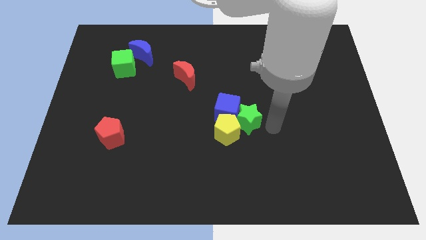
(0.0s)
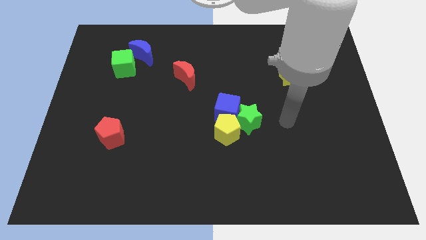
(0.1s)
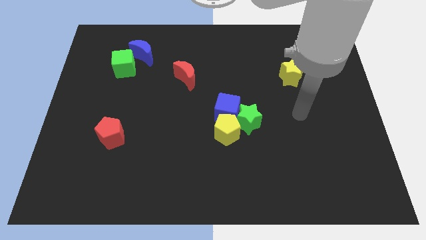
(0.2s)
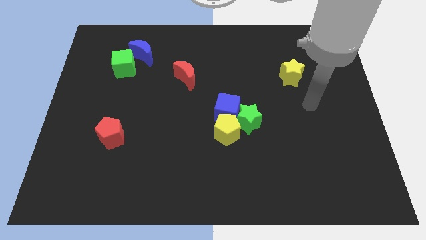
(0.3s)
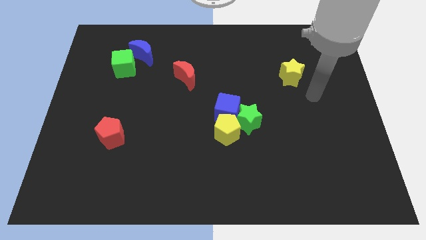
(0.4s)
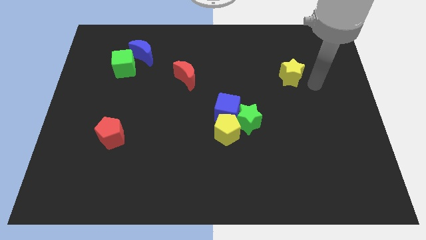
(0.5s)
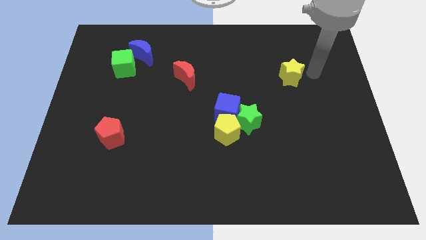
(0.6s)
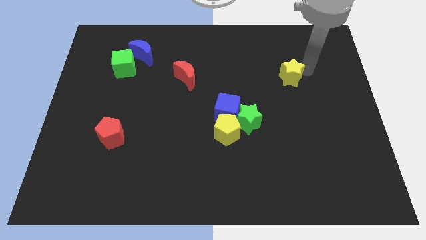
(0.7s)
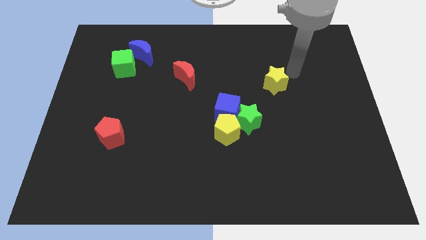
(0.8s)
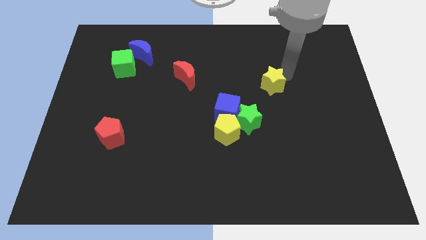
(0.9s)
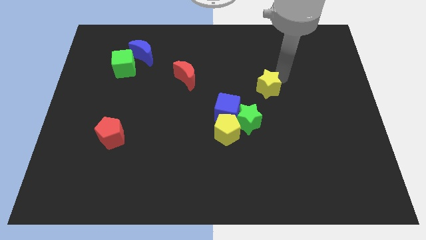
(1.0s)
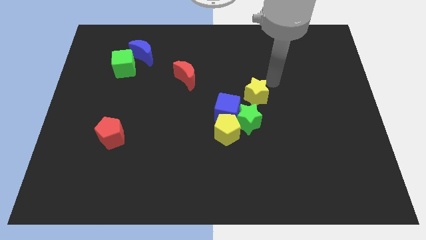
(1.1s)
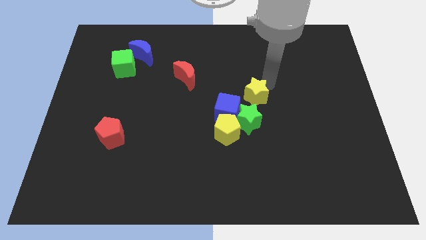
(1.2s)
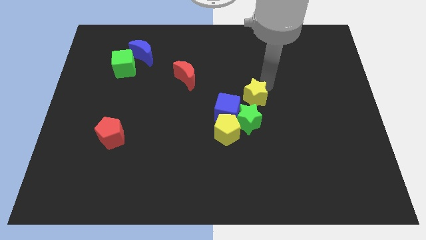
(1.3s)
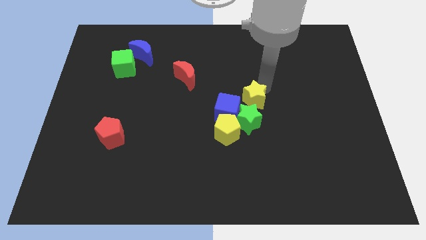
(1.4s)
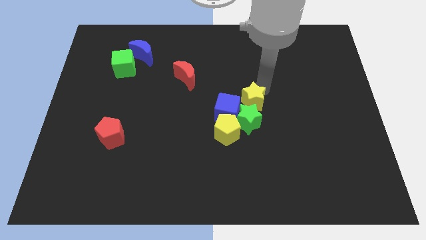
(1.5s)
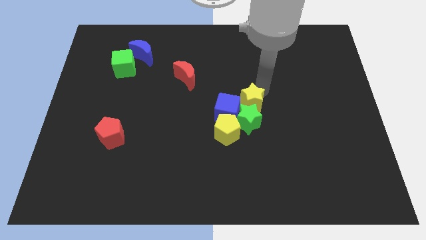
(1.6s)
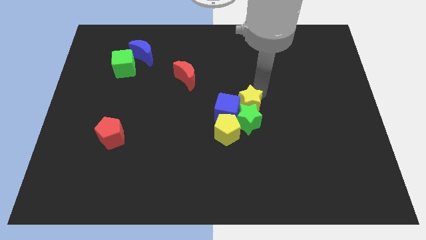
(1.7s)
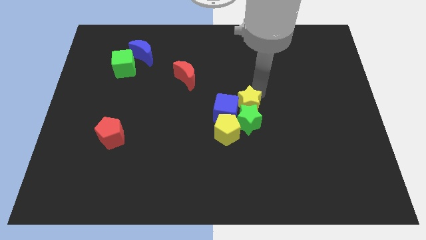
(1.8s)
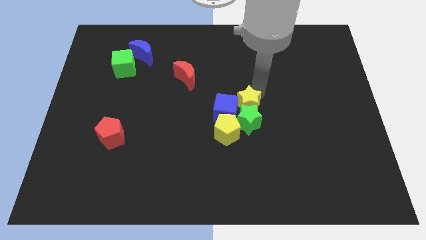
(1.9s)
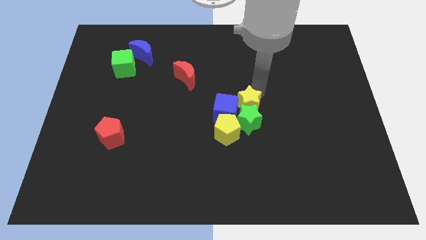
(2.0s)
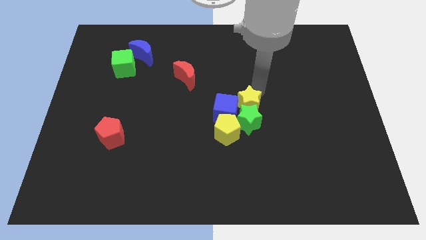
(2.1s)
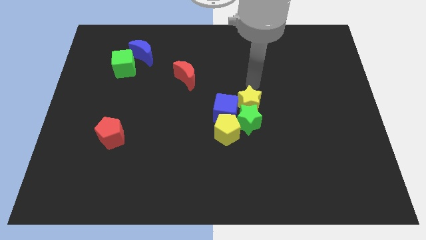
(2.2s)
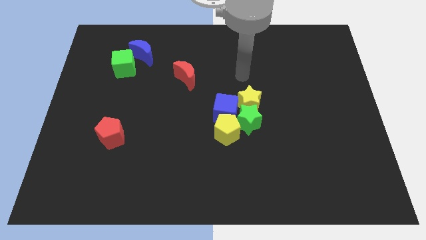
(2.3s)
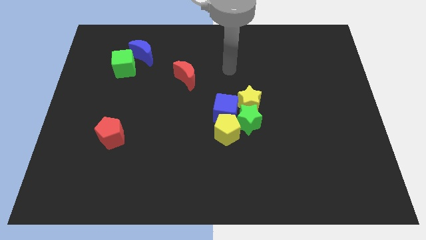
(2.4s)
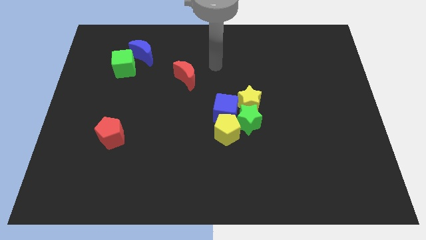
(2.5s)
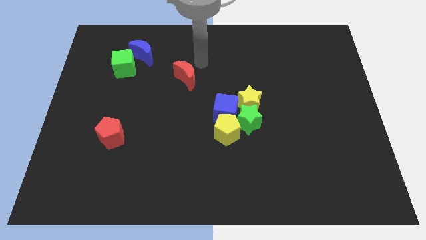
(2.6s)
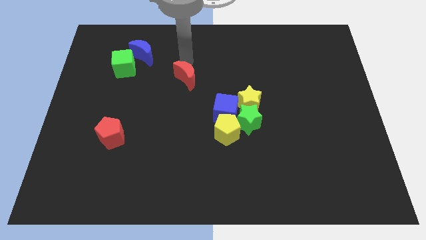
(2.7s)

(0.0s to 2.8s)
move the yellow star to the top side of the green star

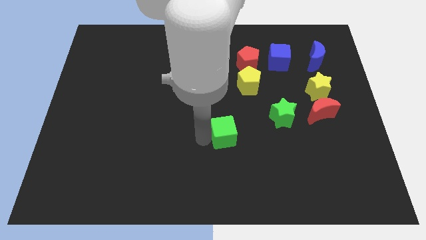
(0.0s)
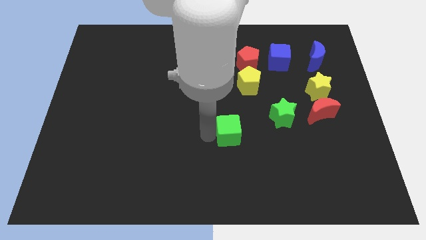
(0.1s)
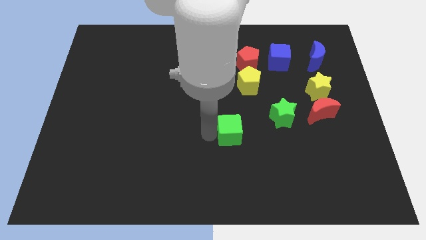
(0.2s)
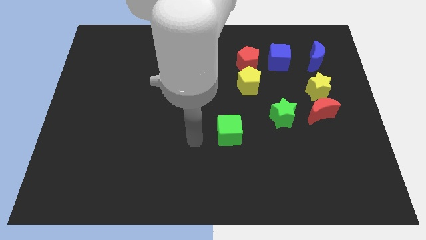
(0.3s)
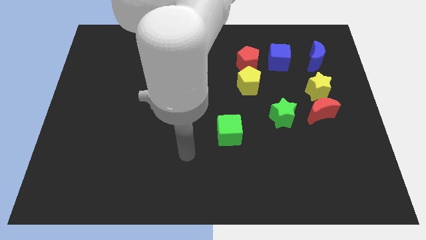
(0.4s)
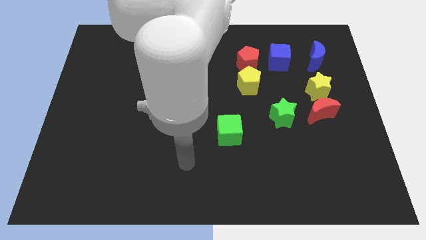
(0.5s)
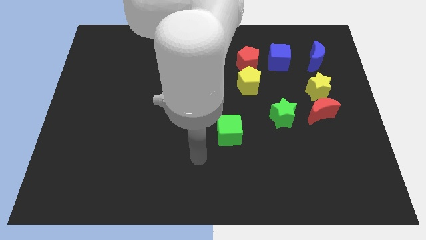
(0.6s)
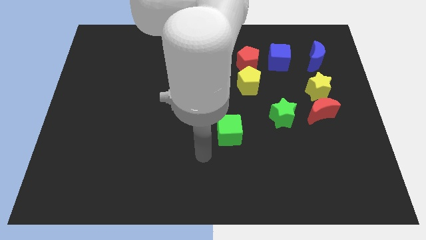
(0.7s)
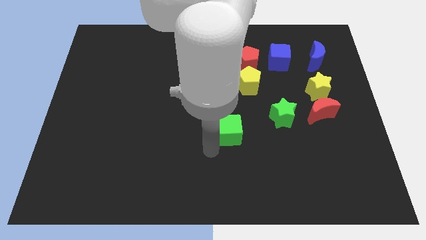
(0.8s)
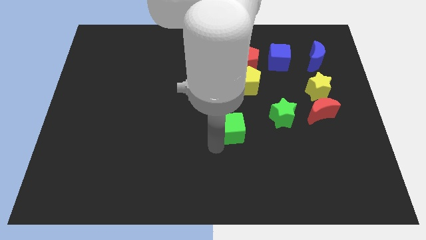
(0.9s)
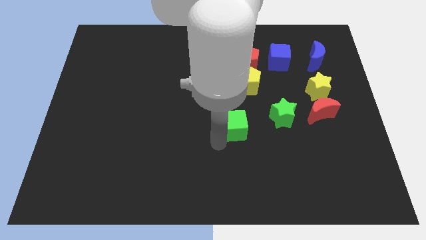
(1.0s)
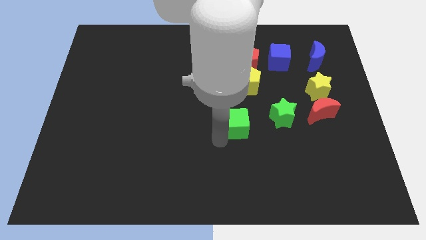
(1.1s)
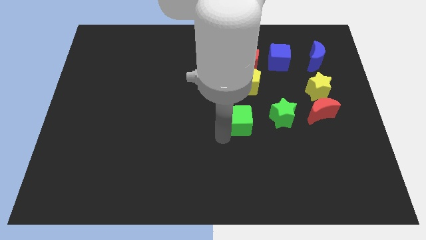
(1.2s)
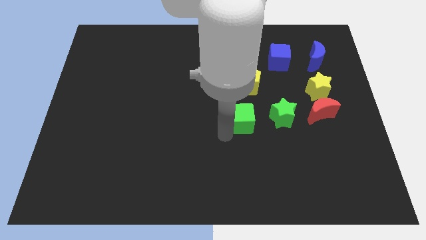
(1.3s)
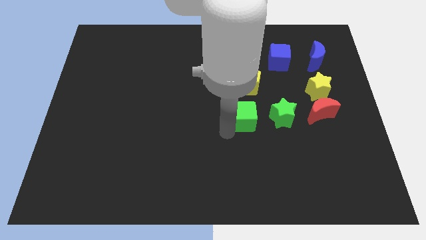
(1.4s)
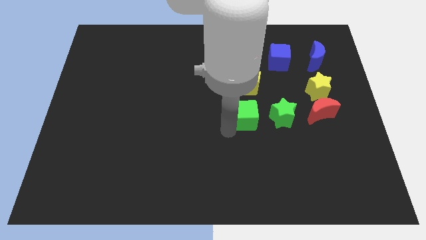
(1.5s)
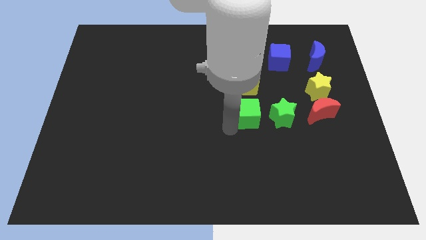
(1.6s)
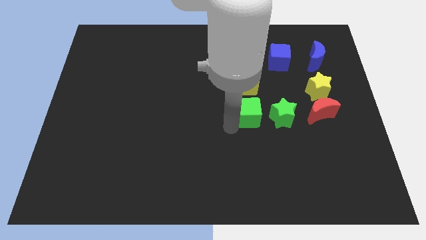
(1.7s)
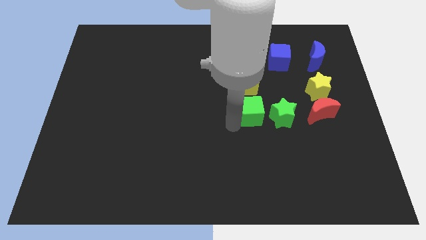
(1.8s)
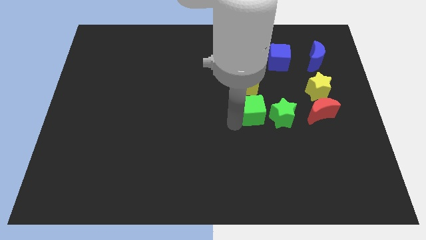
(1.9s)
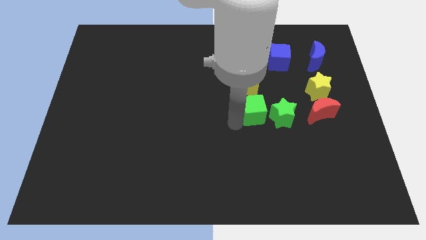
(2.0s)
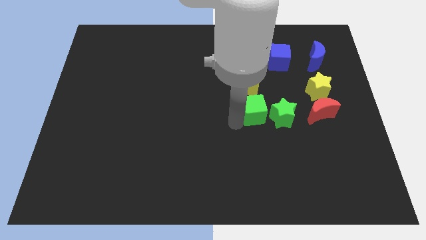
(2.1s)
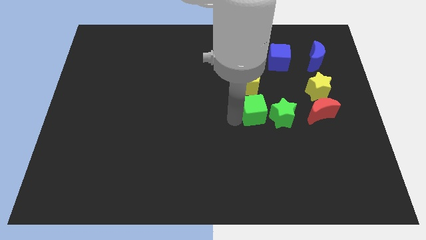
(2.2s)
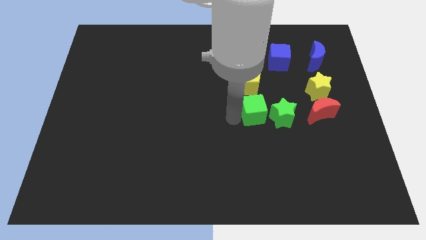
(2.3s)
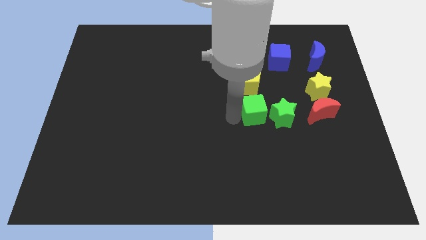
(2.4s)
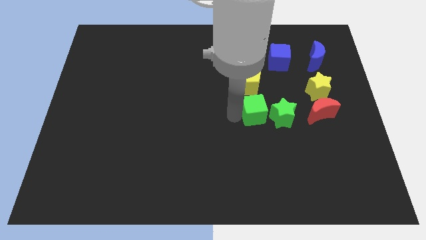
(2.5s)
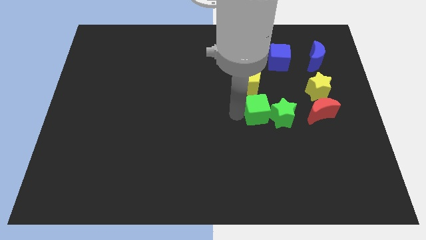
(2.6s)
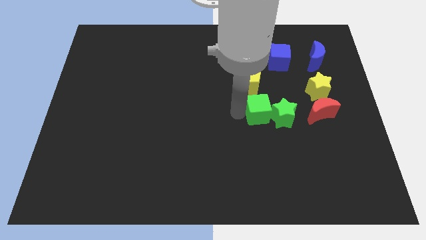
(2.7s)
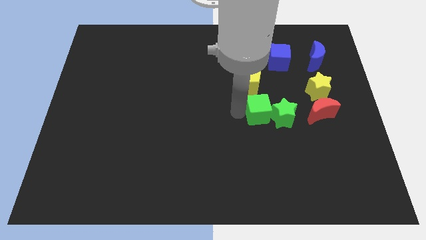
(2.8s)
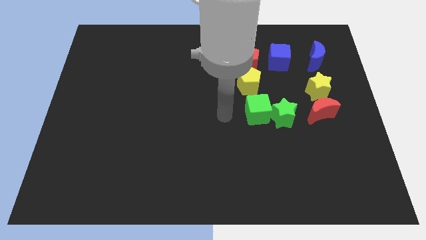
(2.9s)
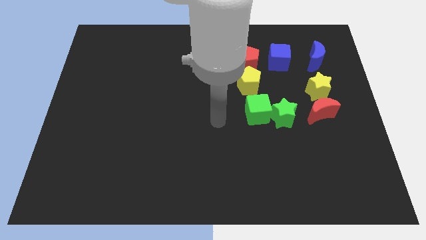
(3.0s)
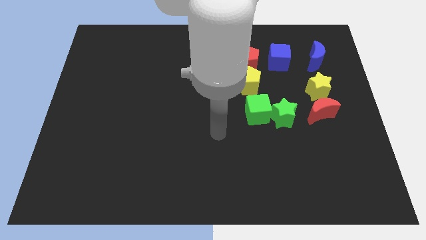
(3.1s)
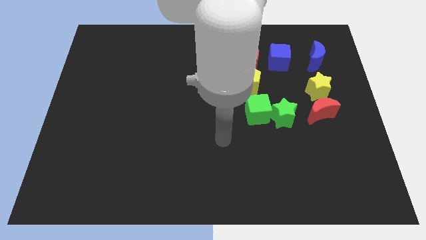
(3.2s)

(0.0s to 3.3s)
move green cube into the group of blocks to form a square

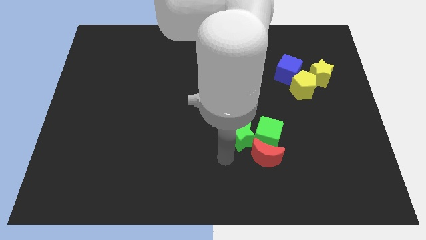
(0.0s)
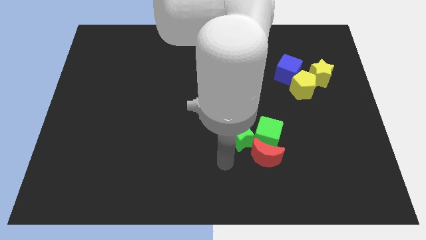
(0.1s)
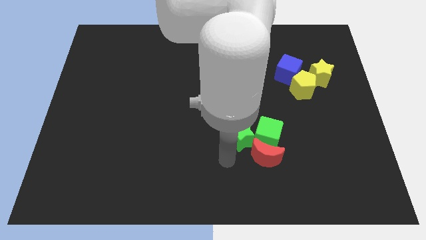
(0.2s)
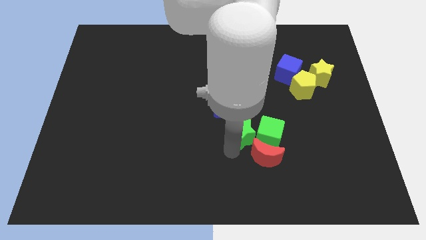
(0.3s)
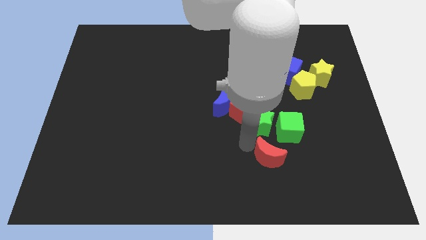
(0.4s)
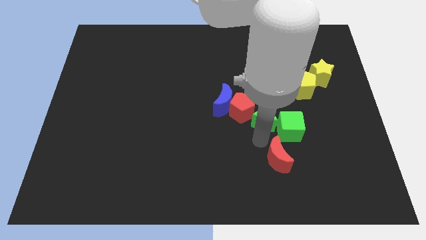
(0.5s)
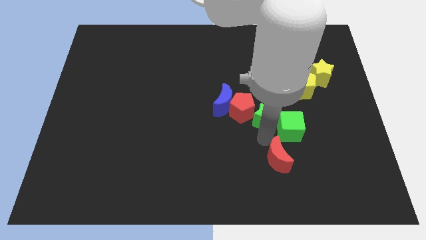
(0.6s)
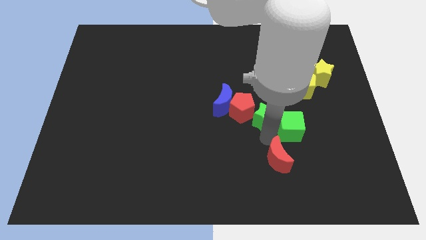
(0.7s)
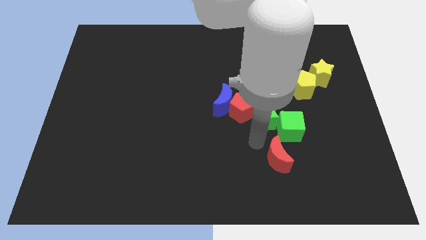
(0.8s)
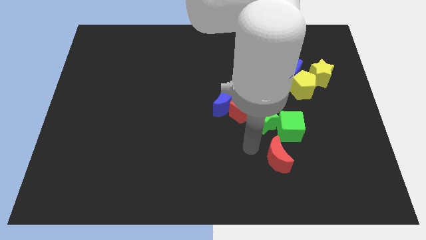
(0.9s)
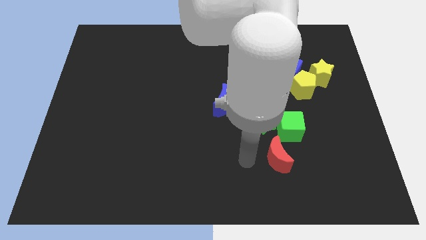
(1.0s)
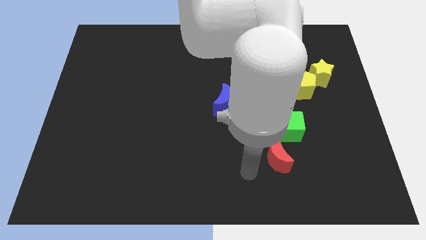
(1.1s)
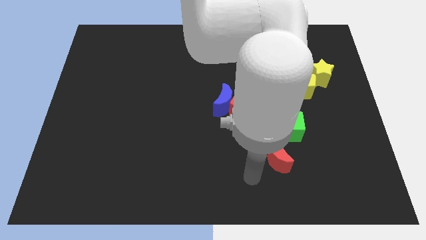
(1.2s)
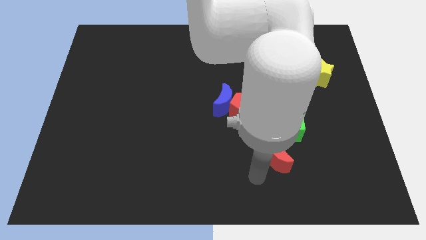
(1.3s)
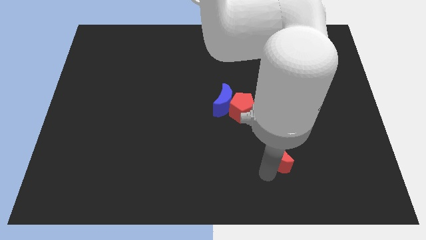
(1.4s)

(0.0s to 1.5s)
push the green star diagonally in between the red pentagon and green cube

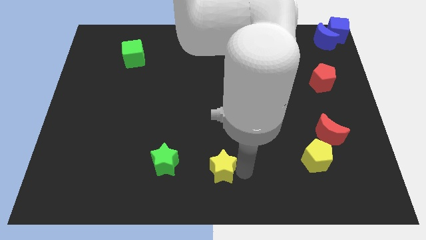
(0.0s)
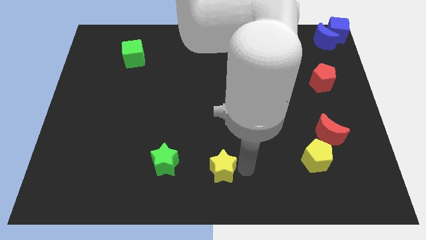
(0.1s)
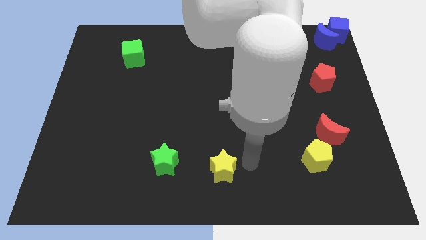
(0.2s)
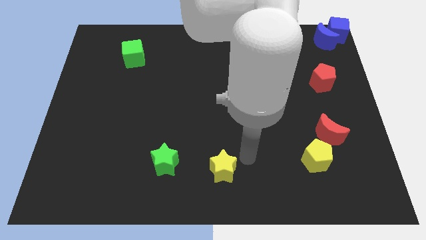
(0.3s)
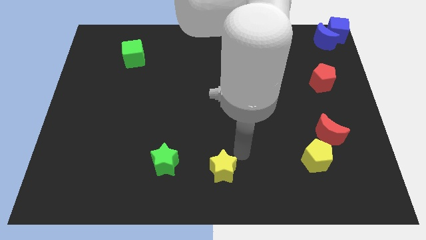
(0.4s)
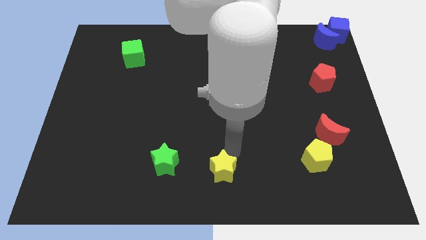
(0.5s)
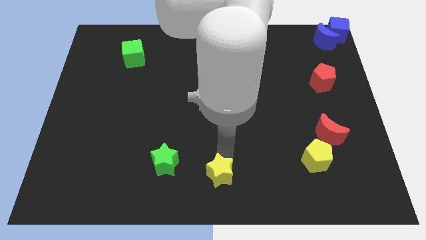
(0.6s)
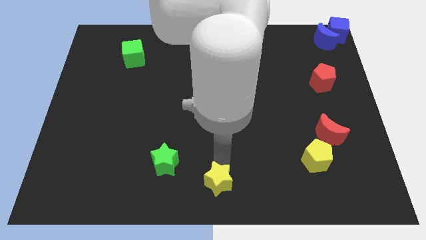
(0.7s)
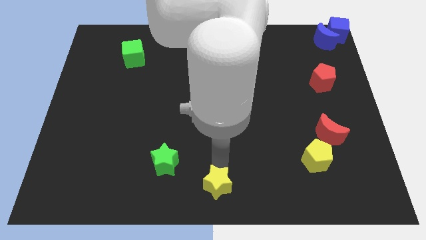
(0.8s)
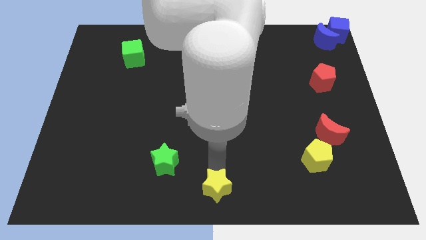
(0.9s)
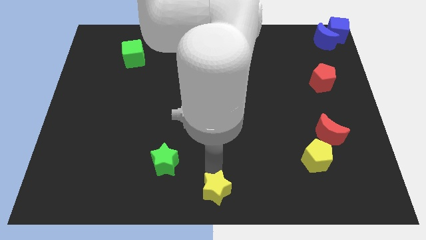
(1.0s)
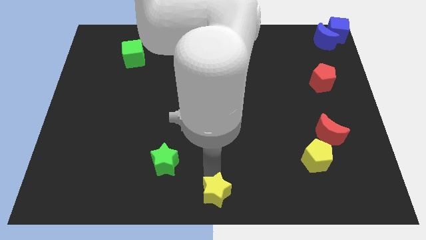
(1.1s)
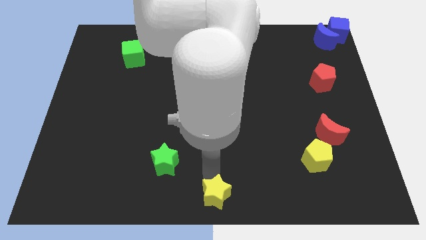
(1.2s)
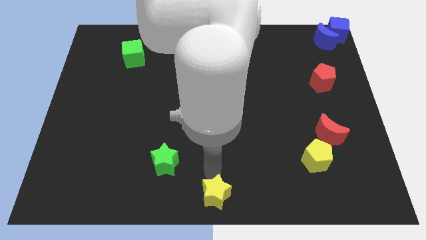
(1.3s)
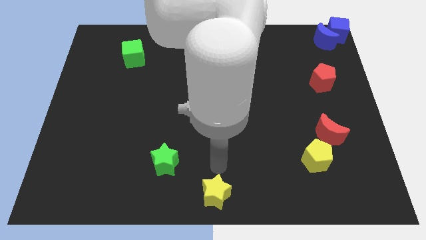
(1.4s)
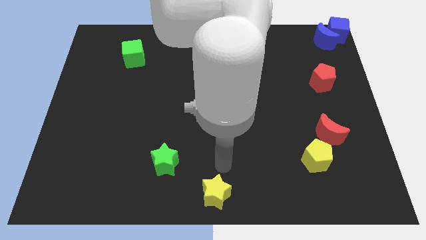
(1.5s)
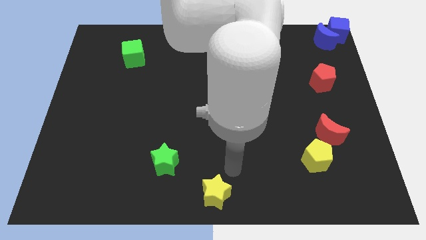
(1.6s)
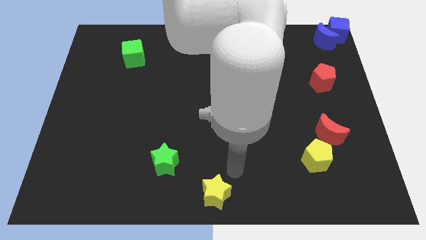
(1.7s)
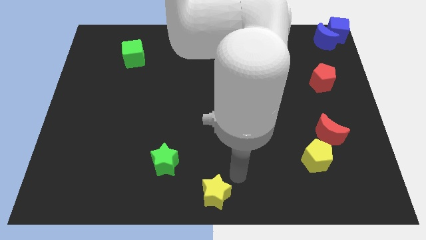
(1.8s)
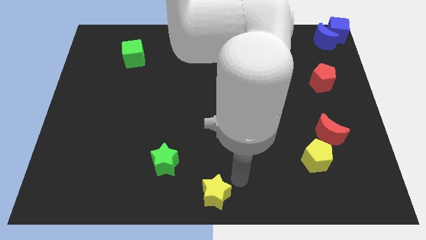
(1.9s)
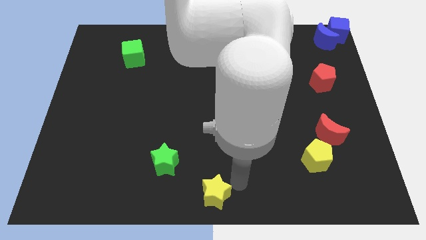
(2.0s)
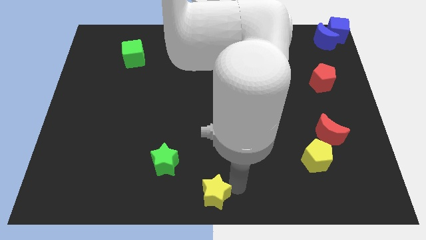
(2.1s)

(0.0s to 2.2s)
move the yellow star to the bottom center of the board
